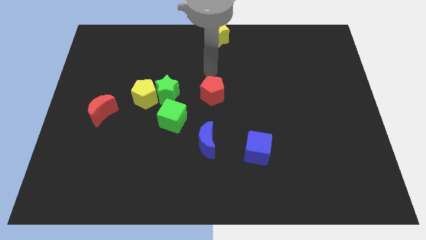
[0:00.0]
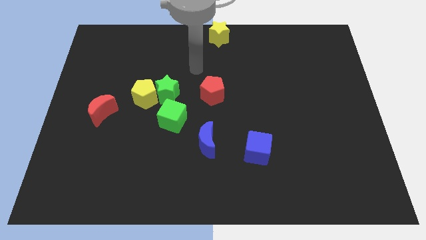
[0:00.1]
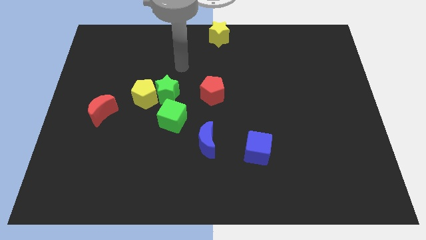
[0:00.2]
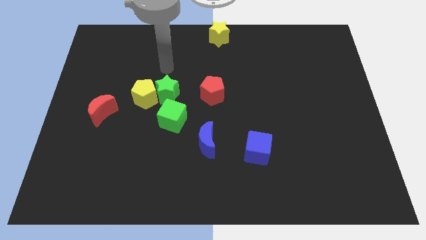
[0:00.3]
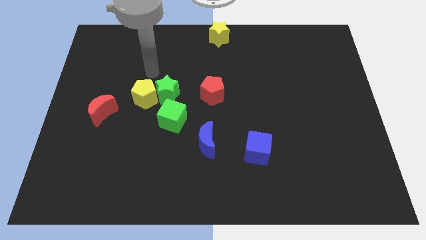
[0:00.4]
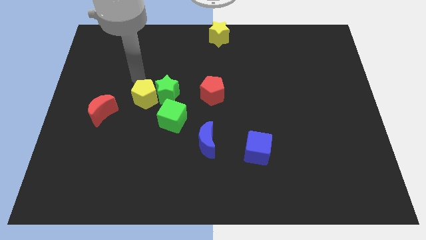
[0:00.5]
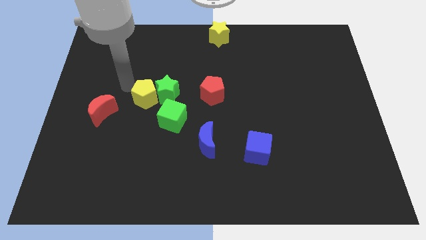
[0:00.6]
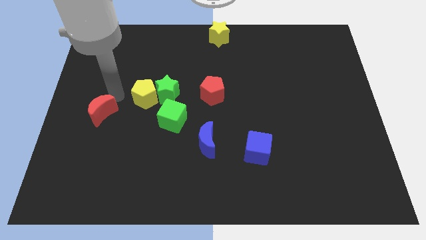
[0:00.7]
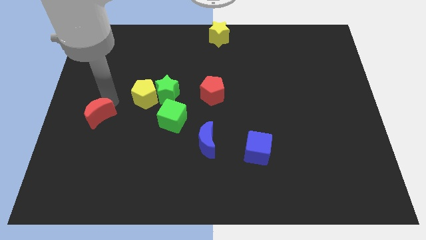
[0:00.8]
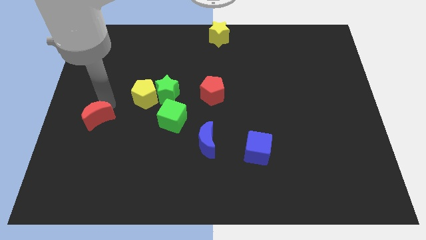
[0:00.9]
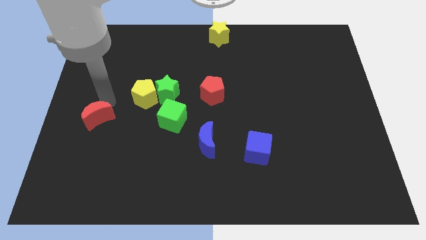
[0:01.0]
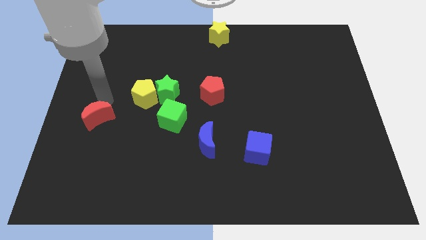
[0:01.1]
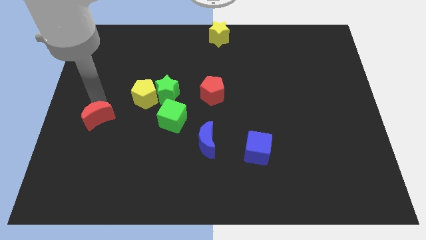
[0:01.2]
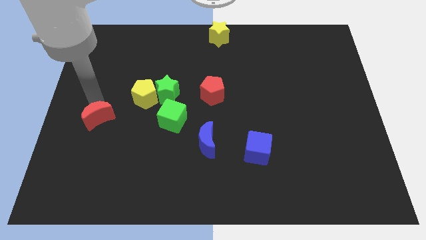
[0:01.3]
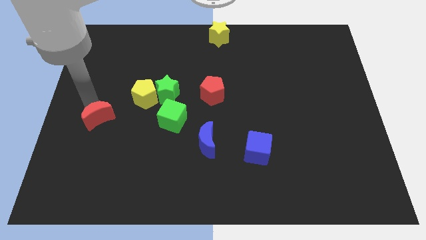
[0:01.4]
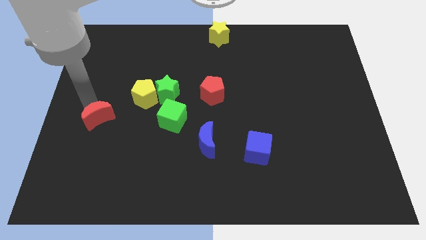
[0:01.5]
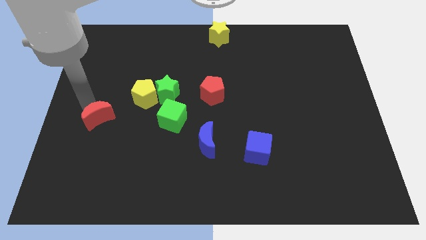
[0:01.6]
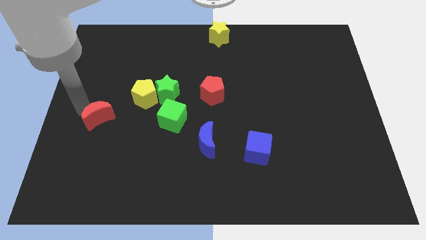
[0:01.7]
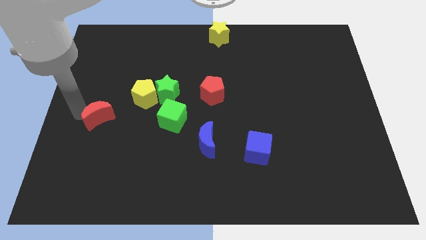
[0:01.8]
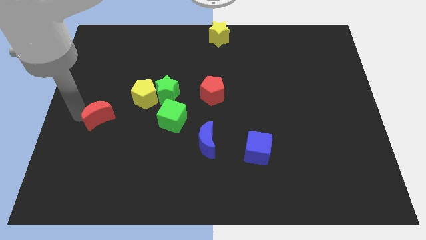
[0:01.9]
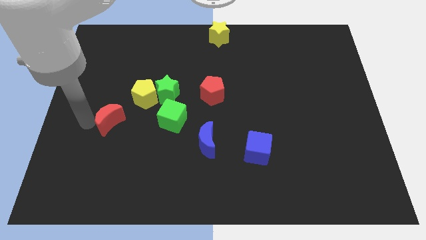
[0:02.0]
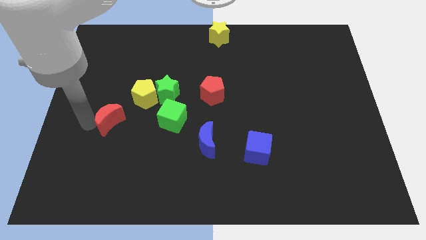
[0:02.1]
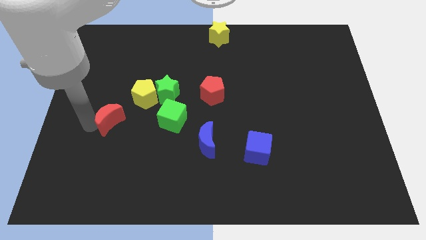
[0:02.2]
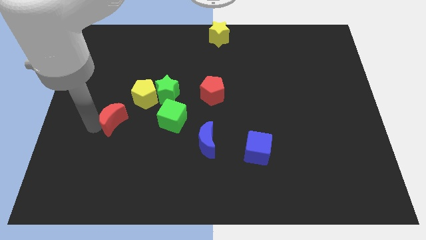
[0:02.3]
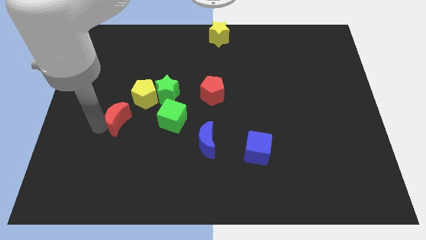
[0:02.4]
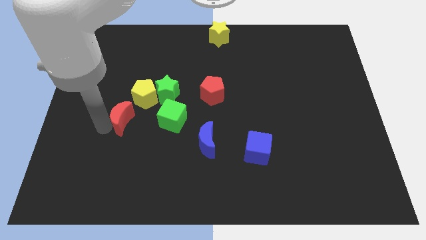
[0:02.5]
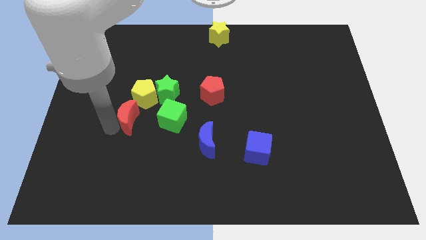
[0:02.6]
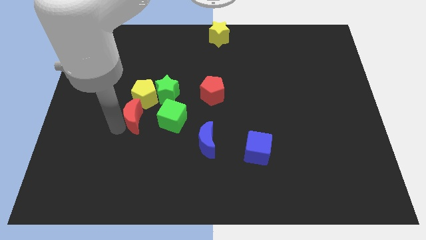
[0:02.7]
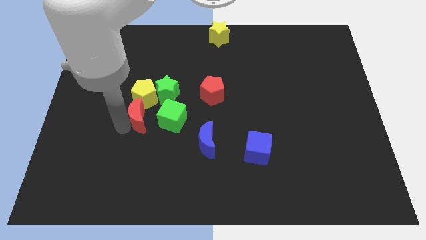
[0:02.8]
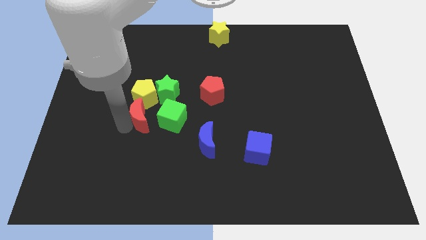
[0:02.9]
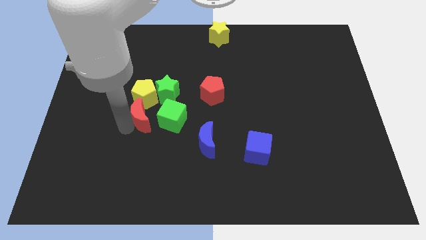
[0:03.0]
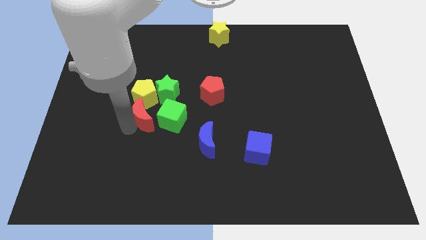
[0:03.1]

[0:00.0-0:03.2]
place red moon to the bottom of yellow pentagon

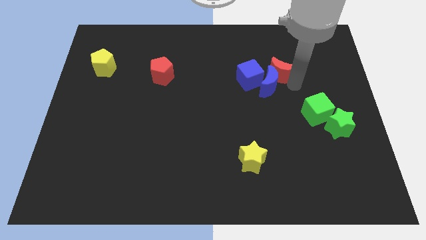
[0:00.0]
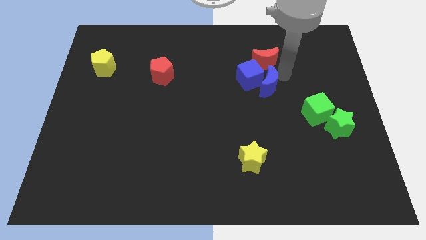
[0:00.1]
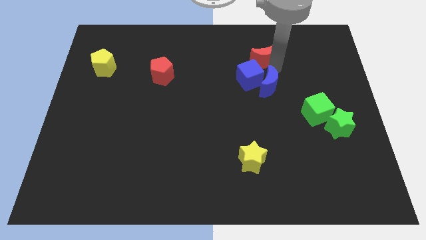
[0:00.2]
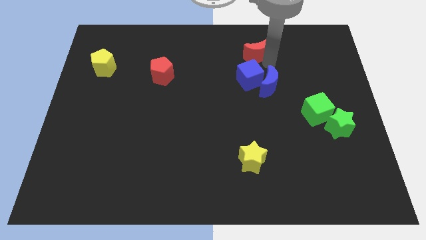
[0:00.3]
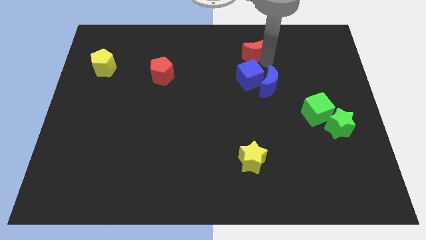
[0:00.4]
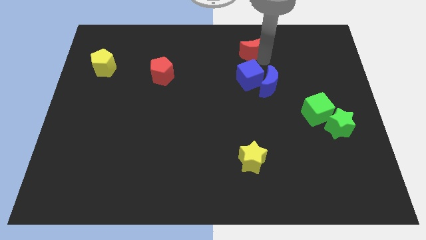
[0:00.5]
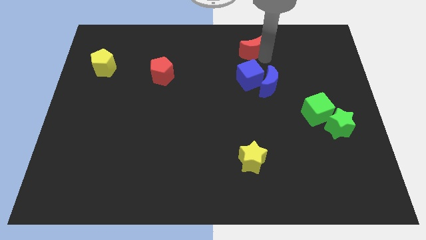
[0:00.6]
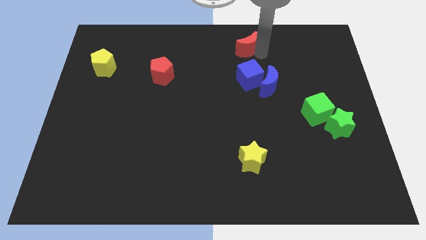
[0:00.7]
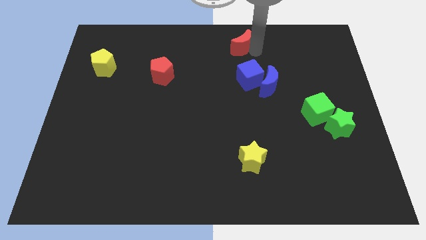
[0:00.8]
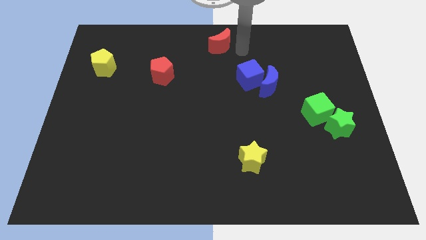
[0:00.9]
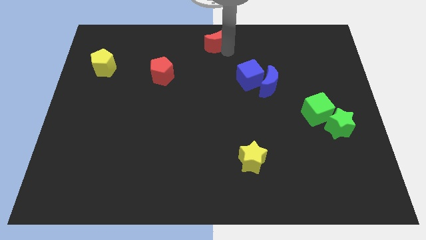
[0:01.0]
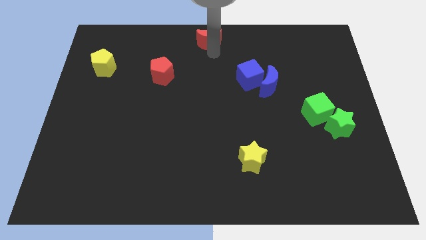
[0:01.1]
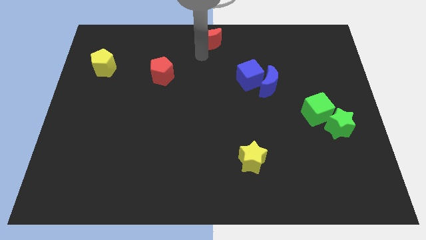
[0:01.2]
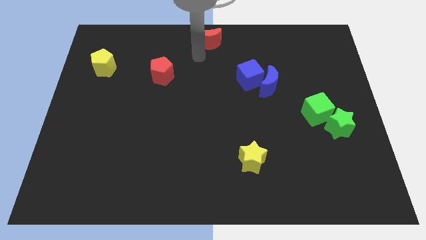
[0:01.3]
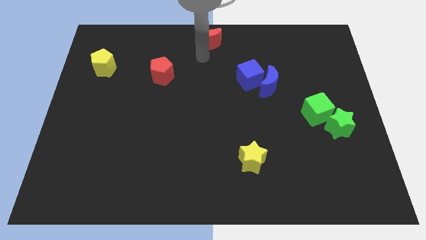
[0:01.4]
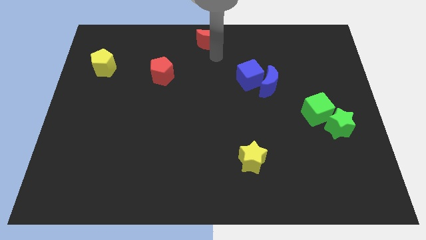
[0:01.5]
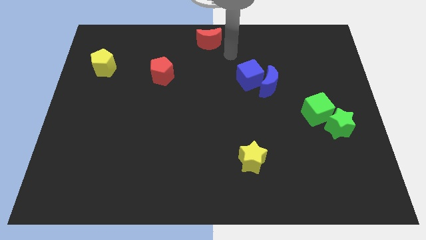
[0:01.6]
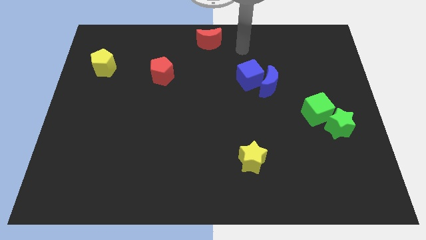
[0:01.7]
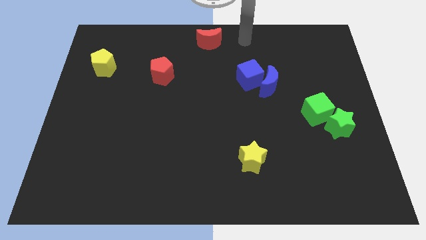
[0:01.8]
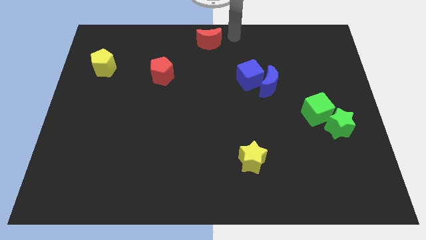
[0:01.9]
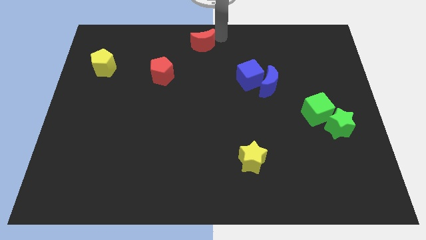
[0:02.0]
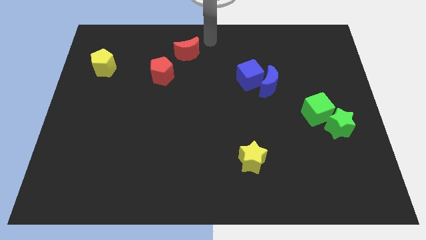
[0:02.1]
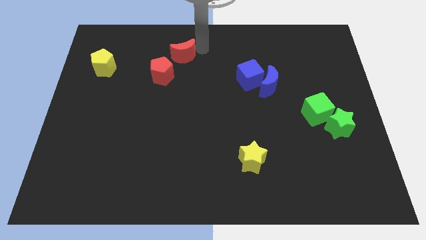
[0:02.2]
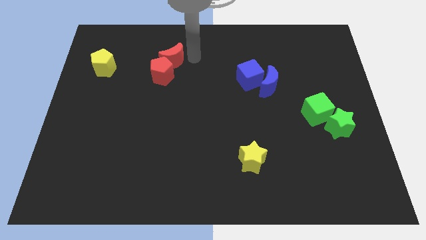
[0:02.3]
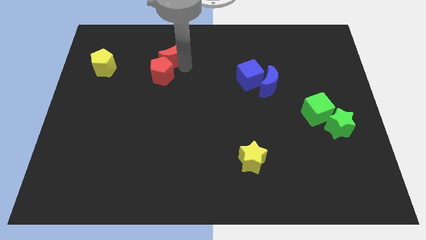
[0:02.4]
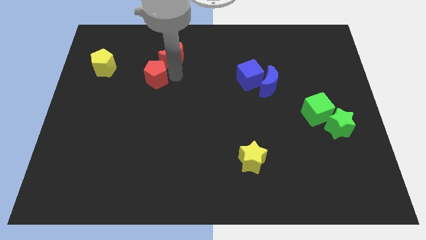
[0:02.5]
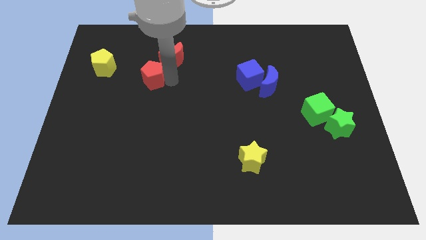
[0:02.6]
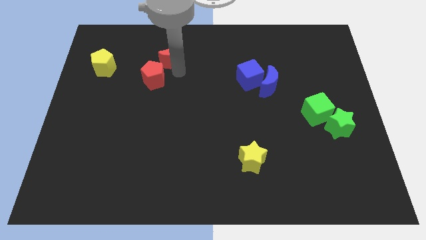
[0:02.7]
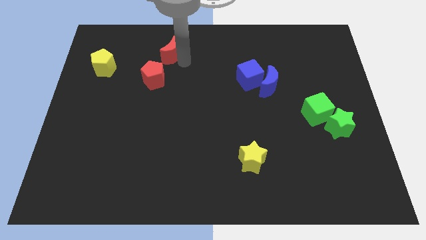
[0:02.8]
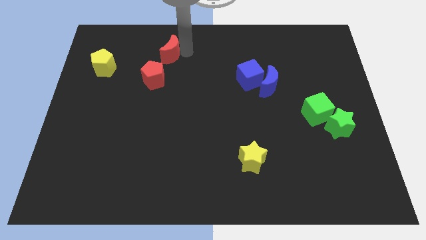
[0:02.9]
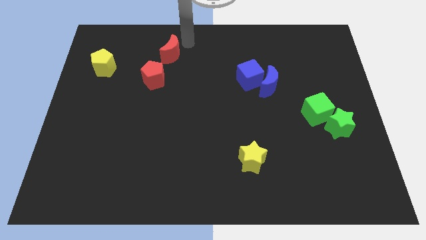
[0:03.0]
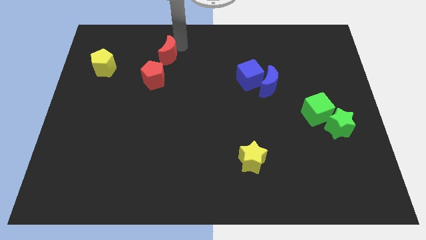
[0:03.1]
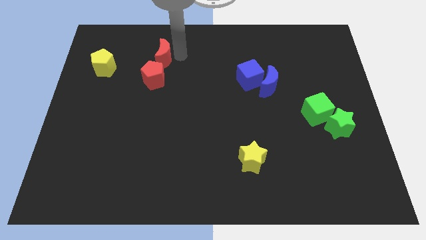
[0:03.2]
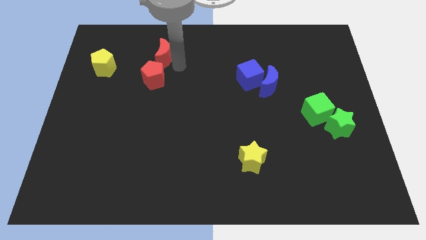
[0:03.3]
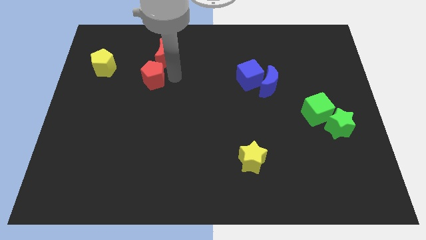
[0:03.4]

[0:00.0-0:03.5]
place the red moon vertically above the red pentagon

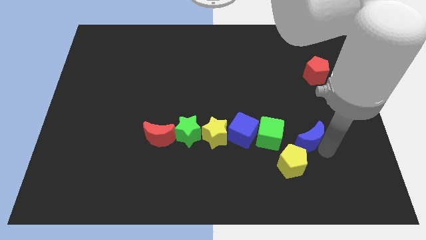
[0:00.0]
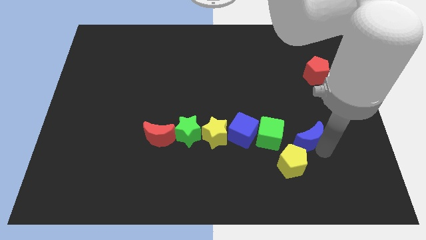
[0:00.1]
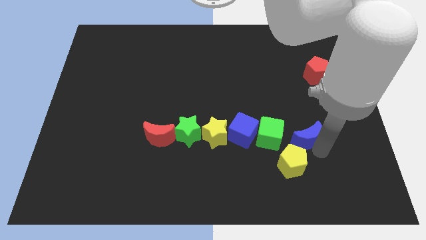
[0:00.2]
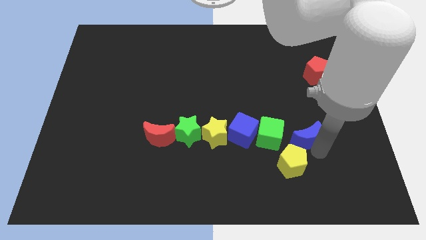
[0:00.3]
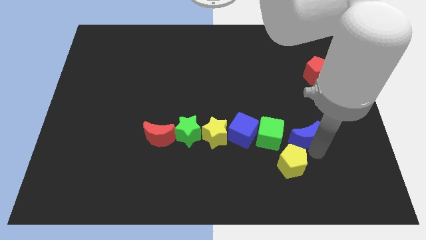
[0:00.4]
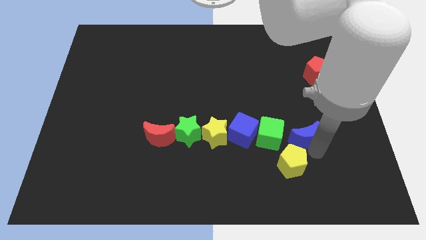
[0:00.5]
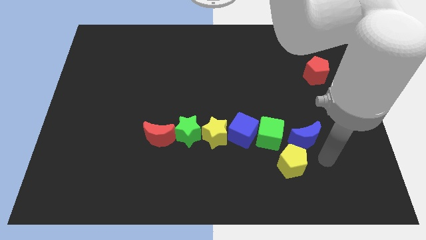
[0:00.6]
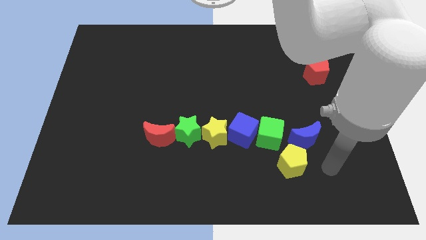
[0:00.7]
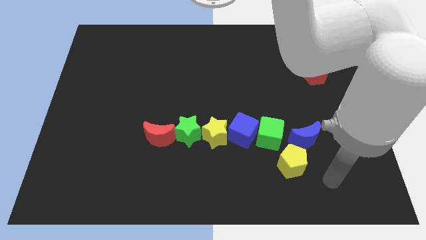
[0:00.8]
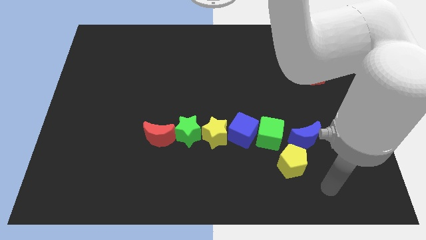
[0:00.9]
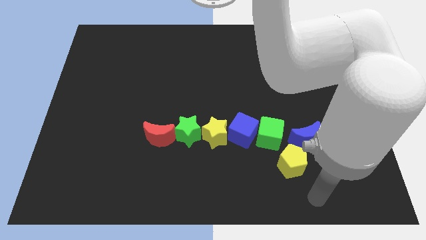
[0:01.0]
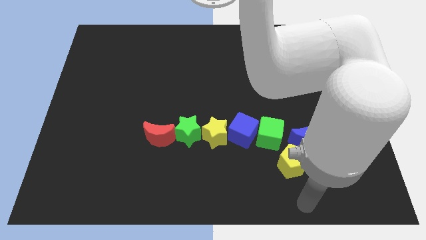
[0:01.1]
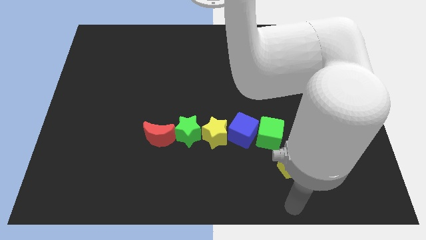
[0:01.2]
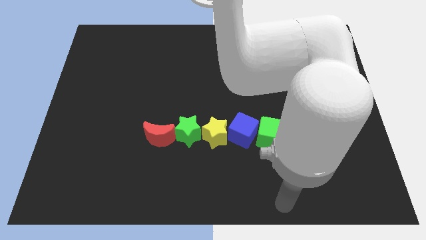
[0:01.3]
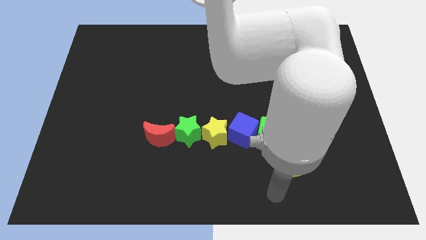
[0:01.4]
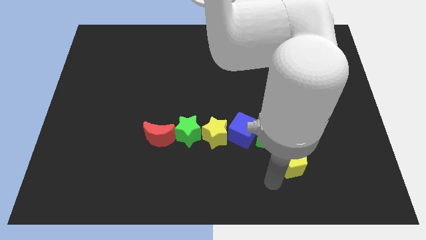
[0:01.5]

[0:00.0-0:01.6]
place the blue moon right side of the green cube

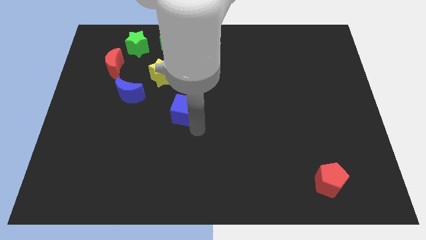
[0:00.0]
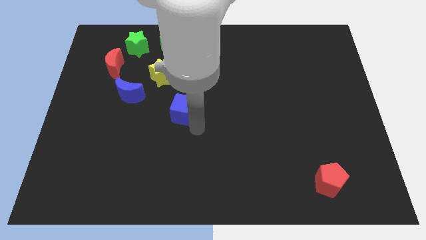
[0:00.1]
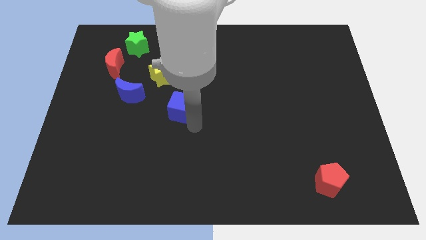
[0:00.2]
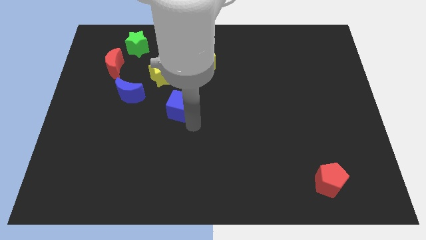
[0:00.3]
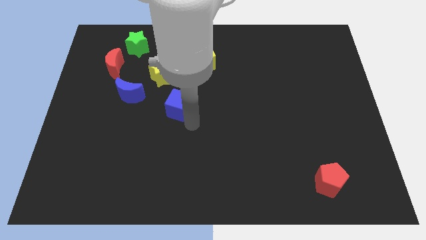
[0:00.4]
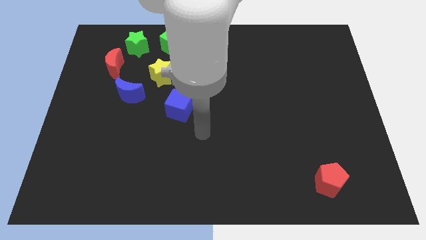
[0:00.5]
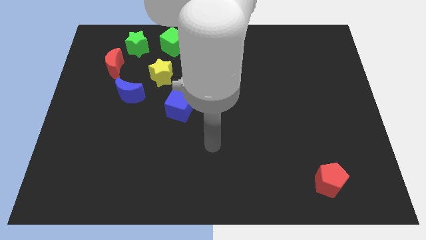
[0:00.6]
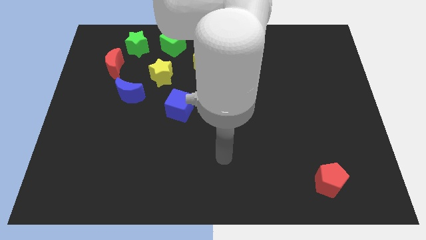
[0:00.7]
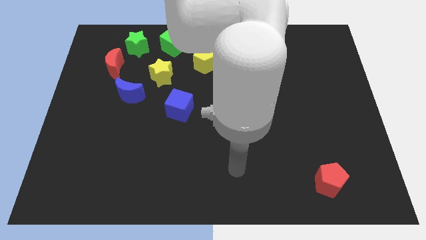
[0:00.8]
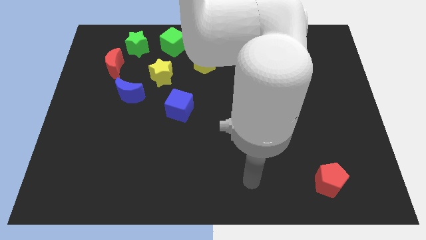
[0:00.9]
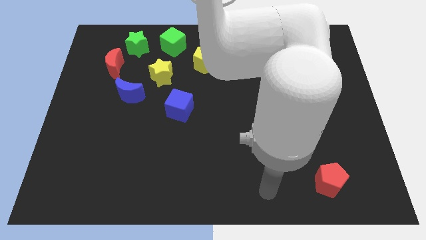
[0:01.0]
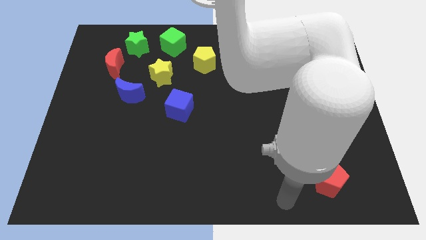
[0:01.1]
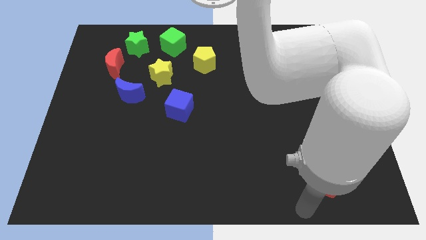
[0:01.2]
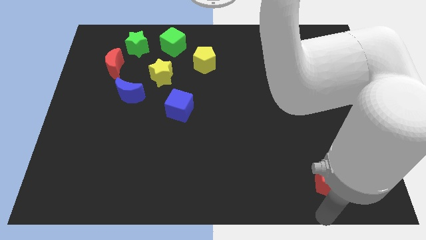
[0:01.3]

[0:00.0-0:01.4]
move the blue cube below the yellow star
